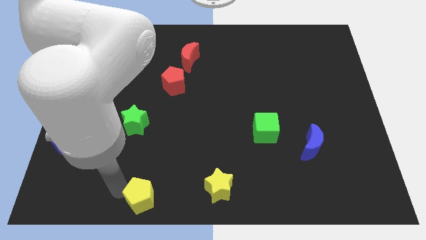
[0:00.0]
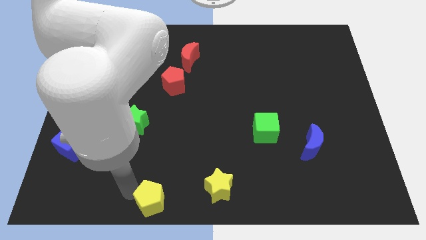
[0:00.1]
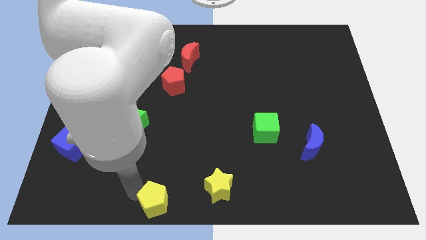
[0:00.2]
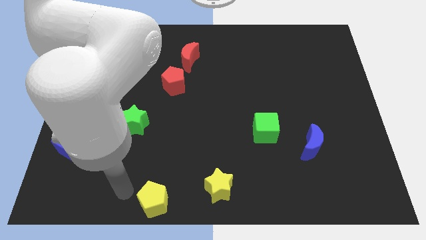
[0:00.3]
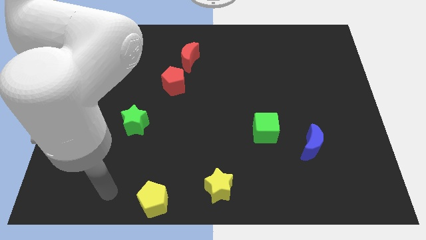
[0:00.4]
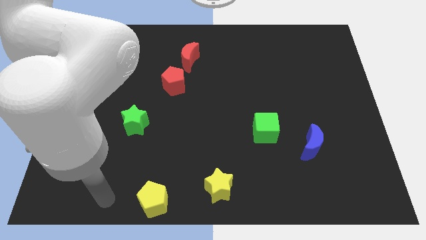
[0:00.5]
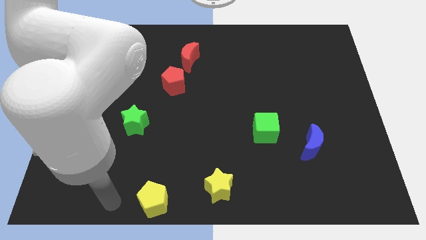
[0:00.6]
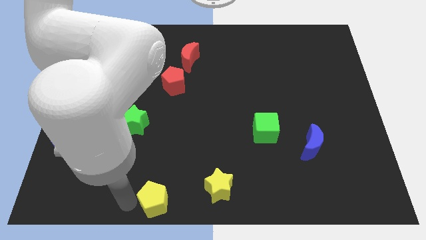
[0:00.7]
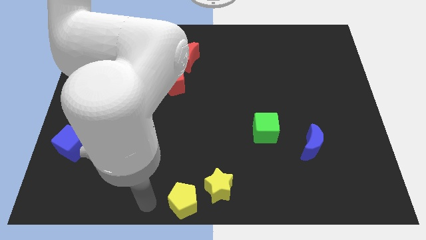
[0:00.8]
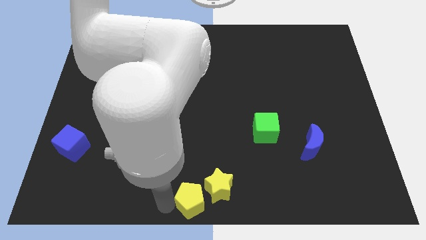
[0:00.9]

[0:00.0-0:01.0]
push yellow pentagon towards yellow star

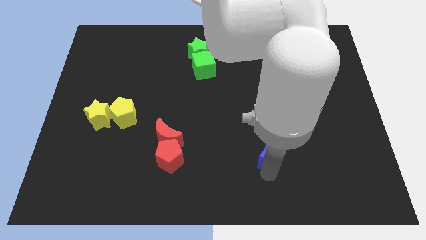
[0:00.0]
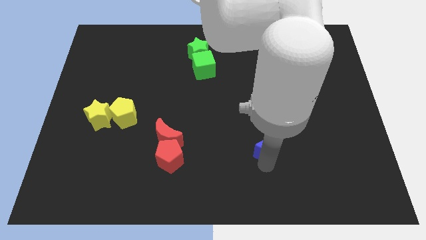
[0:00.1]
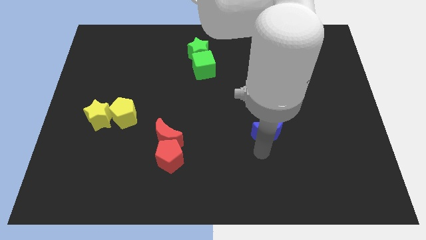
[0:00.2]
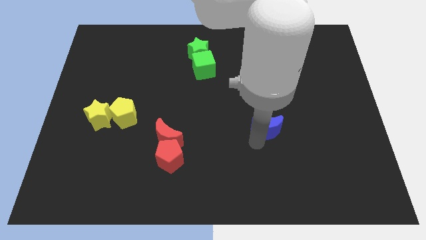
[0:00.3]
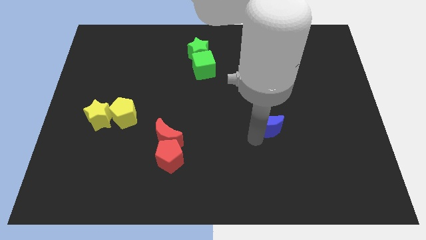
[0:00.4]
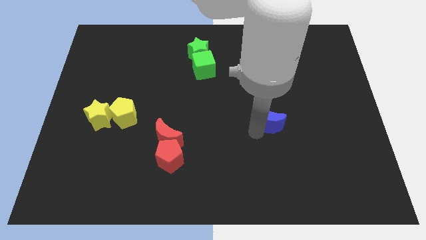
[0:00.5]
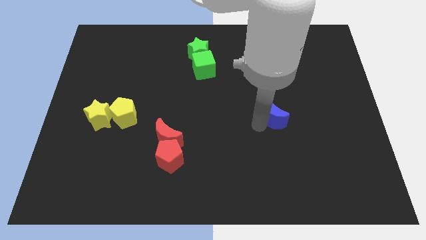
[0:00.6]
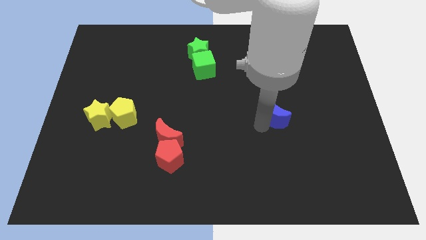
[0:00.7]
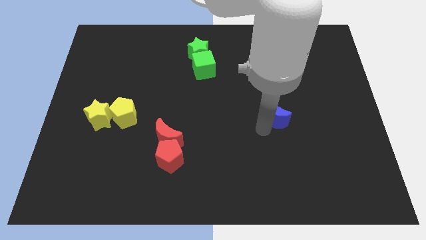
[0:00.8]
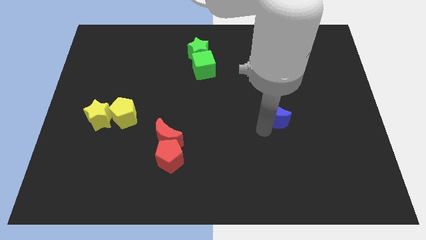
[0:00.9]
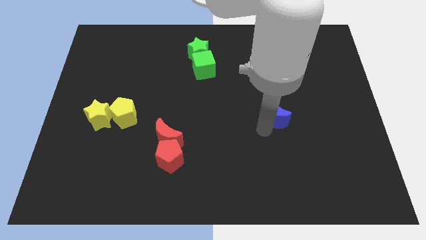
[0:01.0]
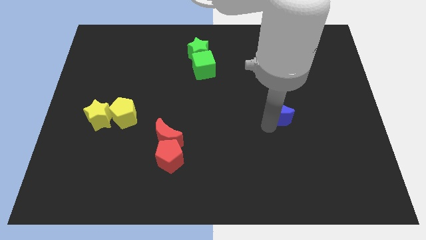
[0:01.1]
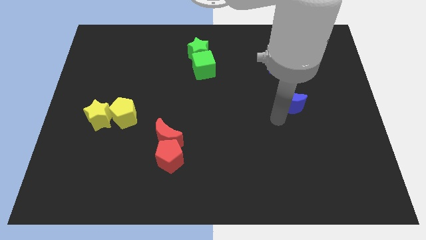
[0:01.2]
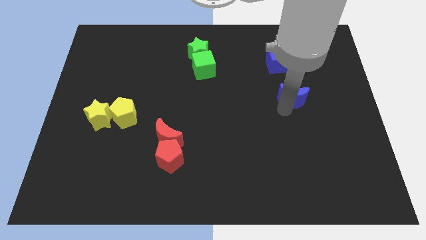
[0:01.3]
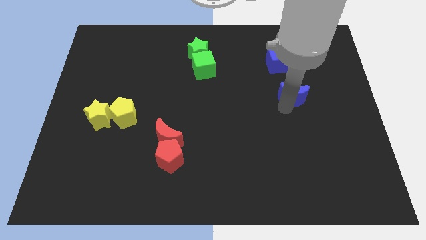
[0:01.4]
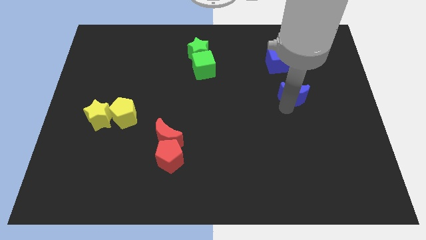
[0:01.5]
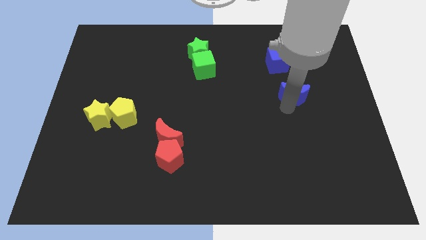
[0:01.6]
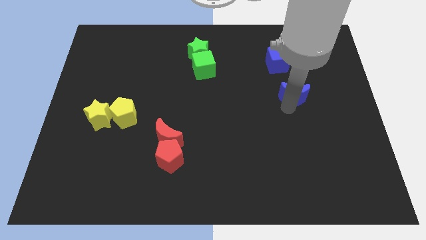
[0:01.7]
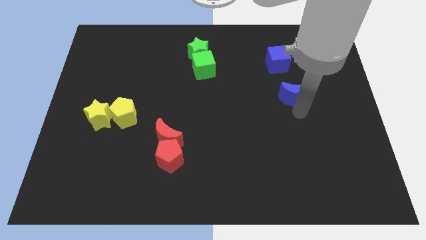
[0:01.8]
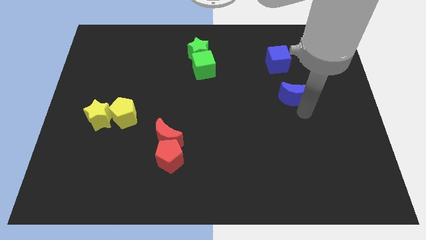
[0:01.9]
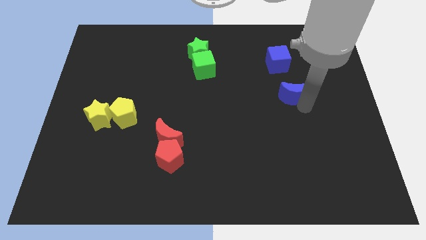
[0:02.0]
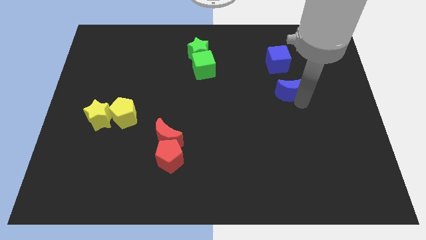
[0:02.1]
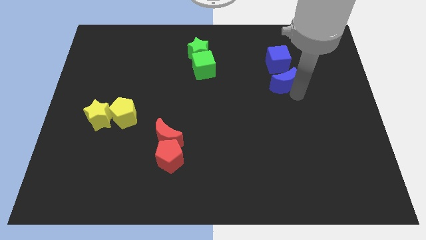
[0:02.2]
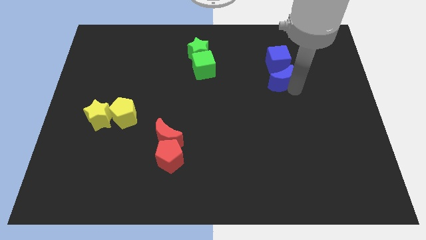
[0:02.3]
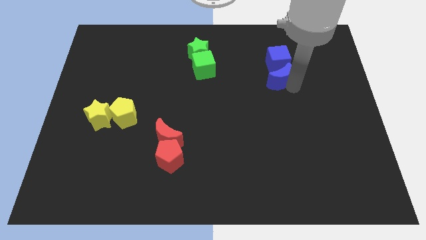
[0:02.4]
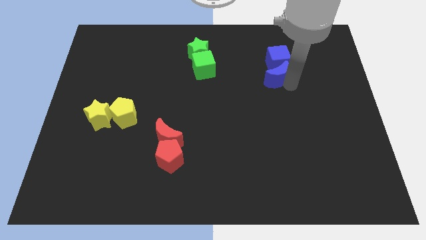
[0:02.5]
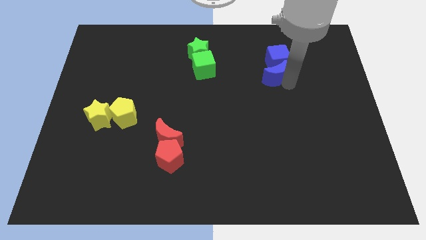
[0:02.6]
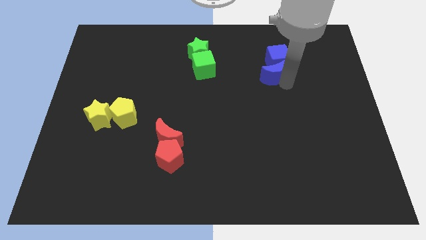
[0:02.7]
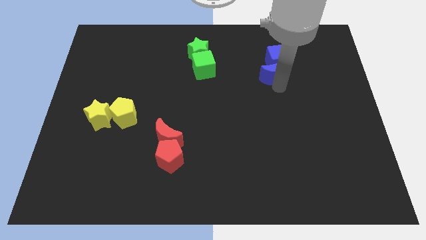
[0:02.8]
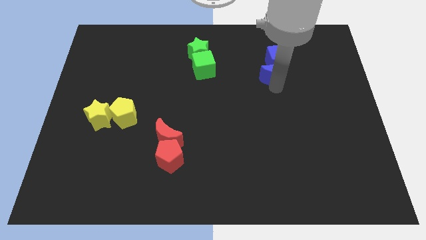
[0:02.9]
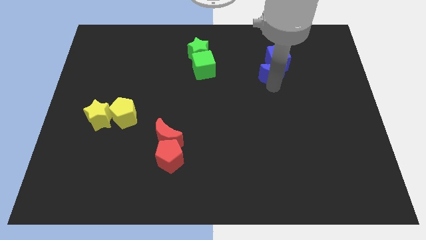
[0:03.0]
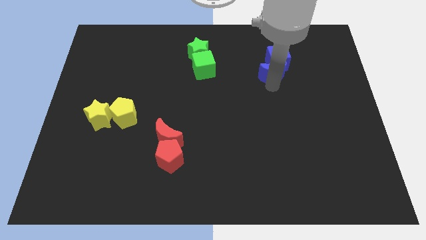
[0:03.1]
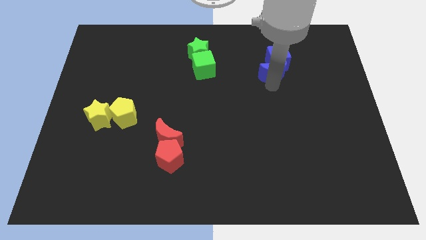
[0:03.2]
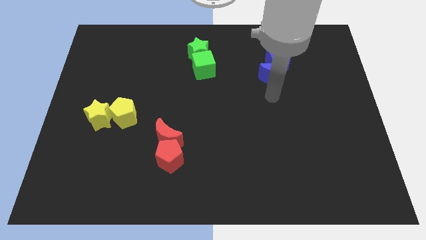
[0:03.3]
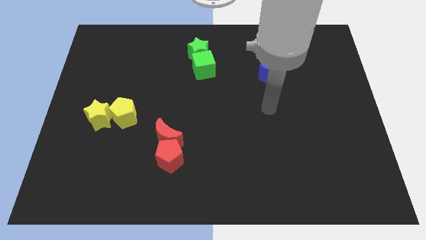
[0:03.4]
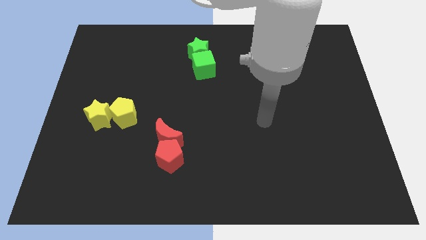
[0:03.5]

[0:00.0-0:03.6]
push the blue moon into the blue cube

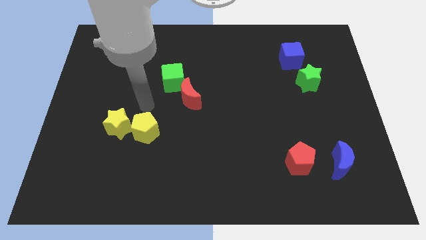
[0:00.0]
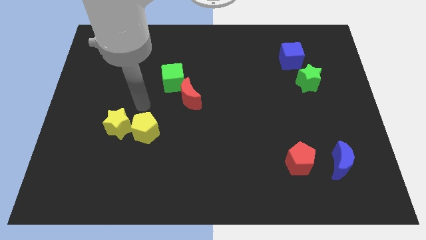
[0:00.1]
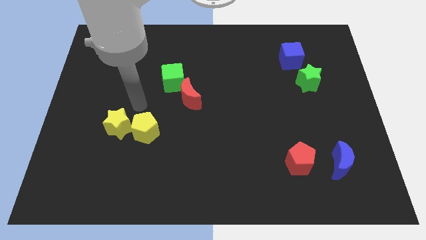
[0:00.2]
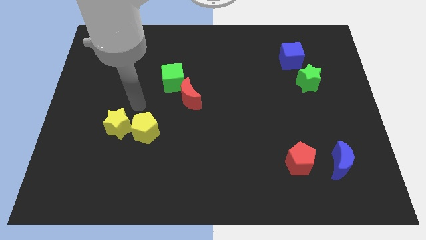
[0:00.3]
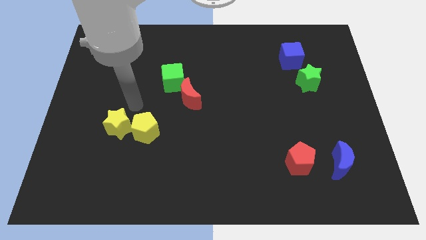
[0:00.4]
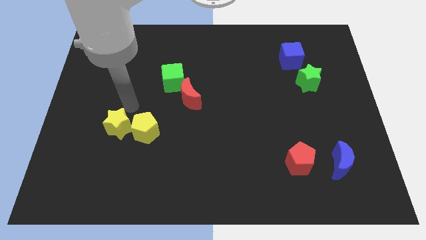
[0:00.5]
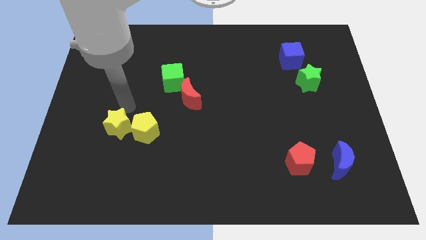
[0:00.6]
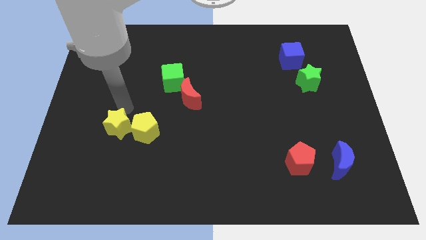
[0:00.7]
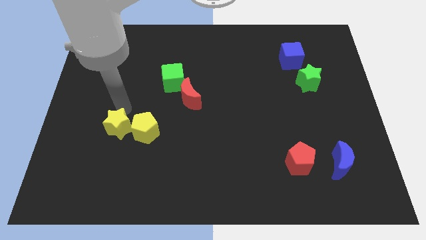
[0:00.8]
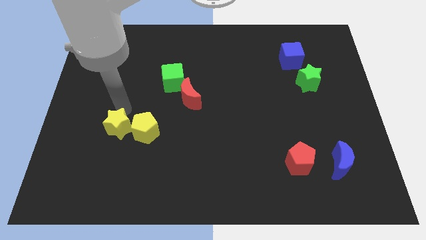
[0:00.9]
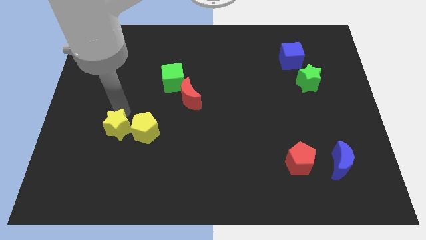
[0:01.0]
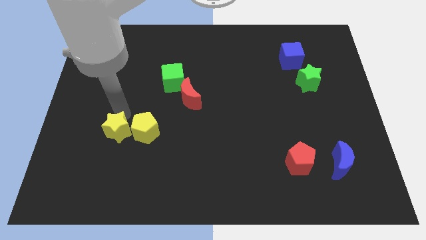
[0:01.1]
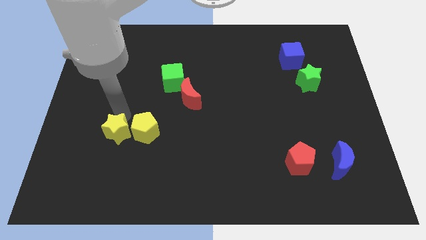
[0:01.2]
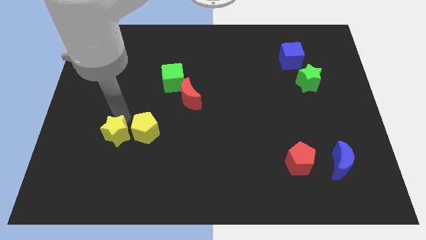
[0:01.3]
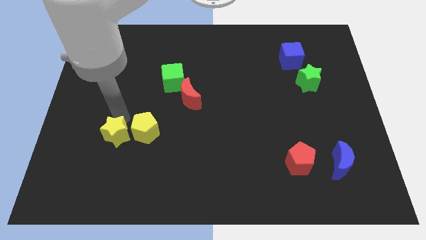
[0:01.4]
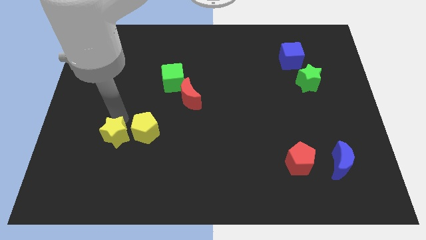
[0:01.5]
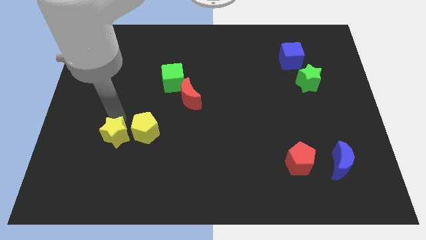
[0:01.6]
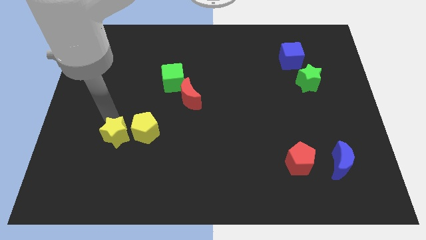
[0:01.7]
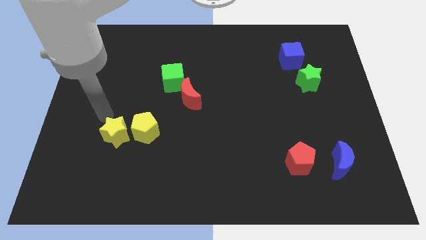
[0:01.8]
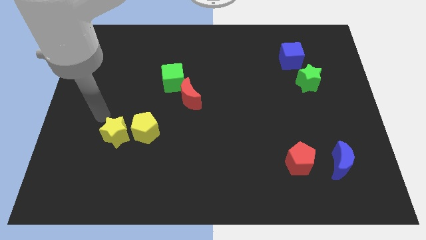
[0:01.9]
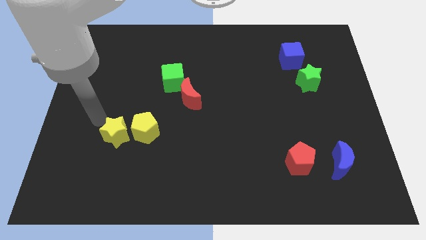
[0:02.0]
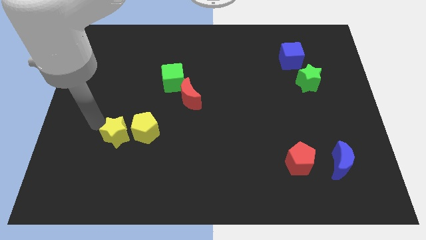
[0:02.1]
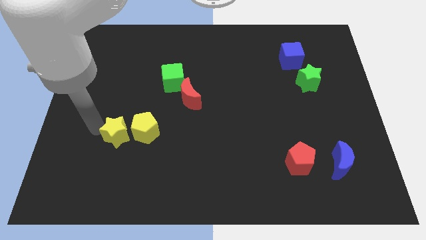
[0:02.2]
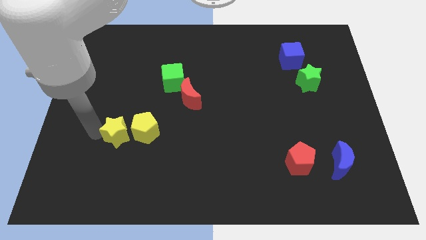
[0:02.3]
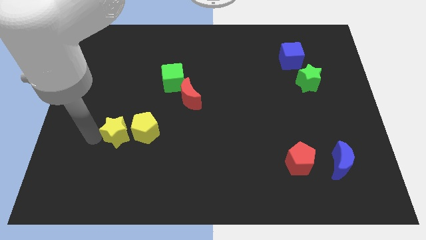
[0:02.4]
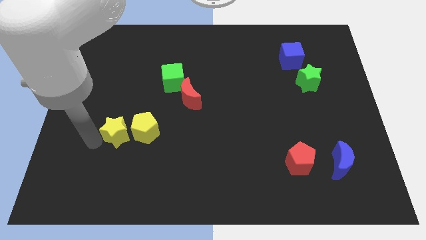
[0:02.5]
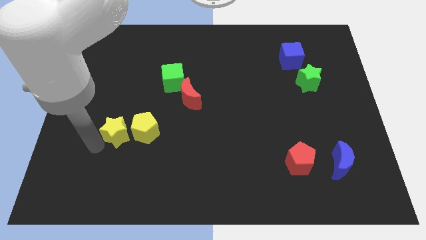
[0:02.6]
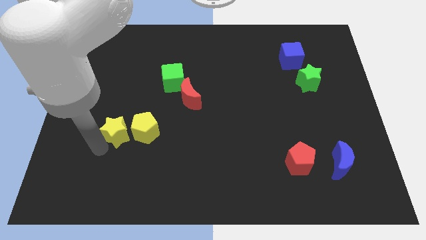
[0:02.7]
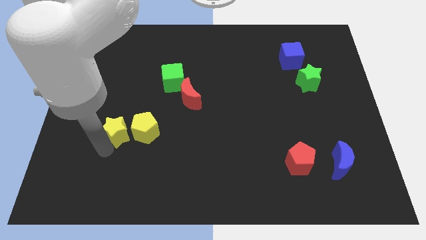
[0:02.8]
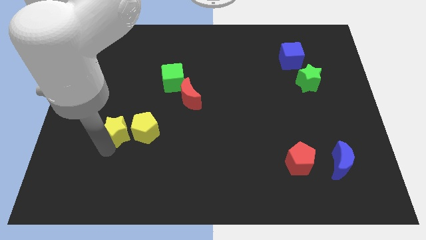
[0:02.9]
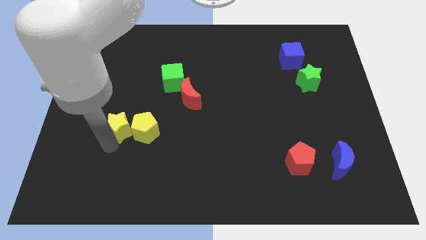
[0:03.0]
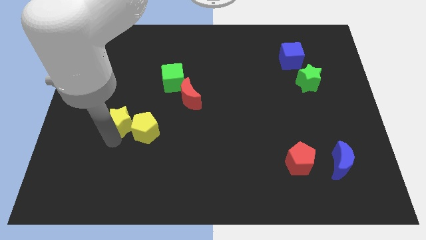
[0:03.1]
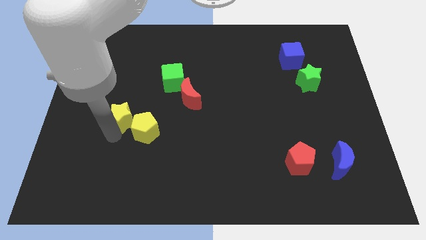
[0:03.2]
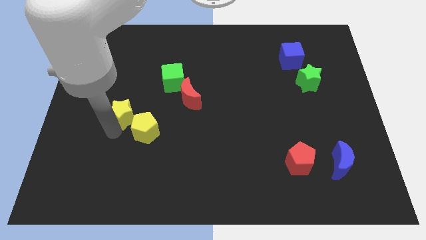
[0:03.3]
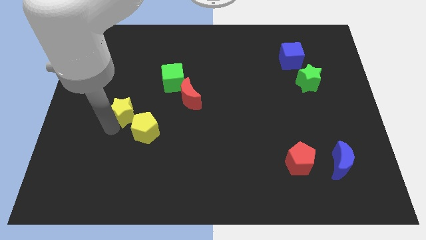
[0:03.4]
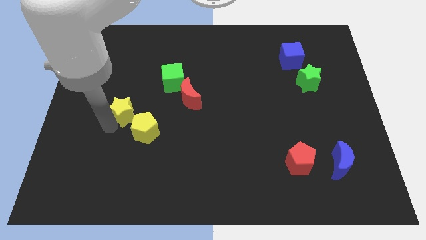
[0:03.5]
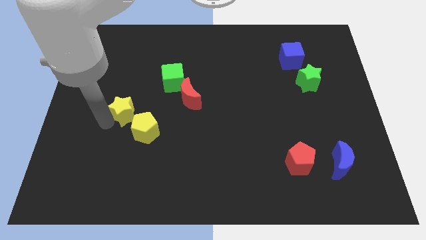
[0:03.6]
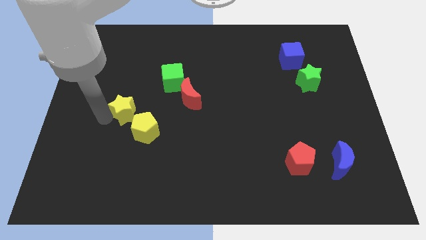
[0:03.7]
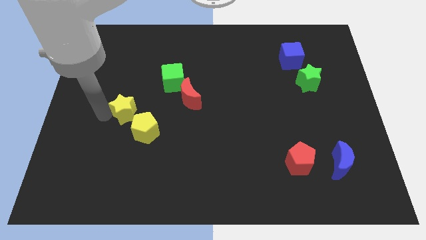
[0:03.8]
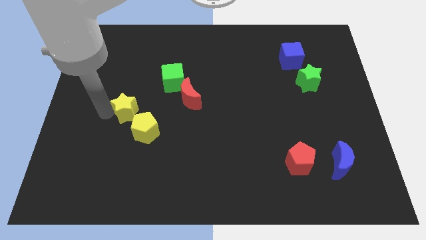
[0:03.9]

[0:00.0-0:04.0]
drag the yellow pentagon to the bottom right of yellow star

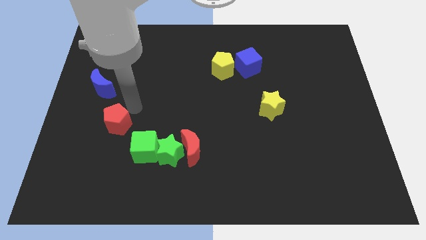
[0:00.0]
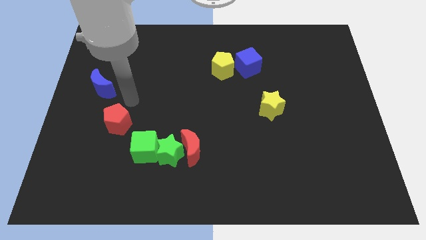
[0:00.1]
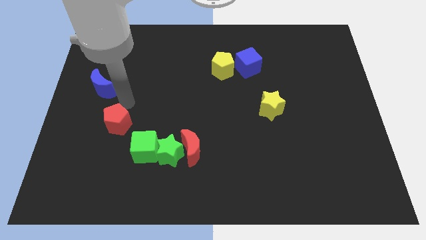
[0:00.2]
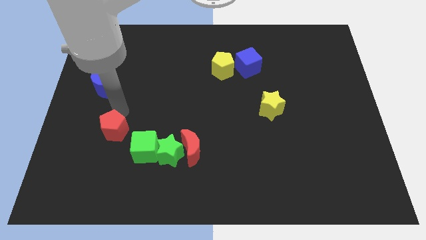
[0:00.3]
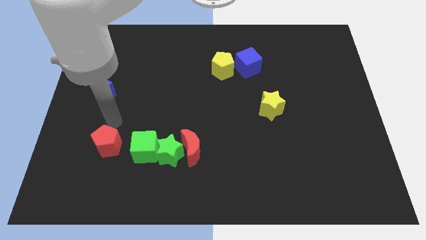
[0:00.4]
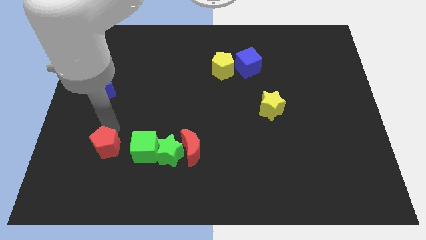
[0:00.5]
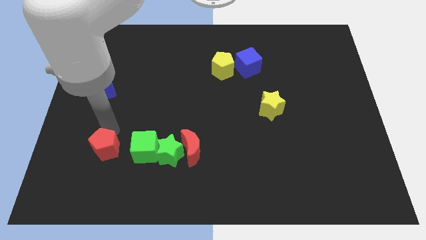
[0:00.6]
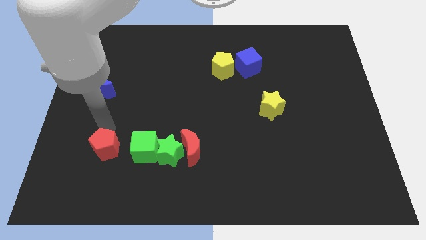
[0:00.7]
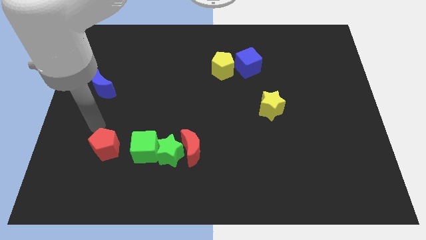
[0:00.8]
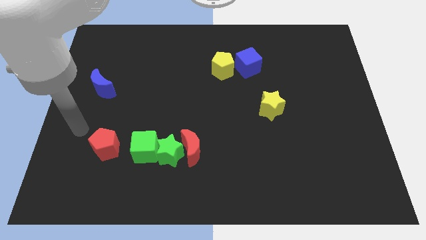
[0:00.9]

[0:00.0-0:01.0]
move the red pentagon left to the green cube
